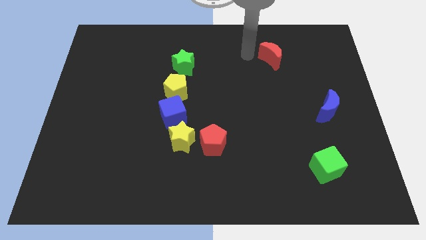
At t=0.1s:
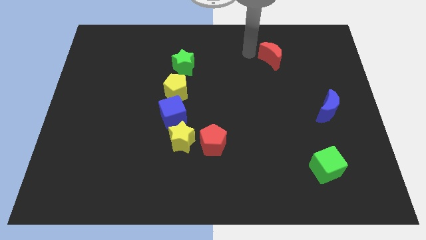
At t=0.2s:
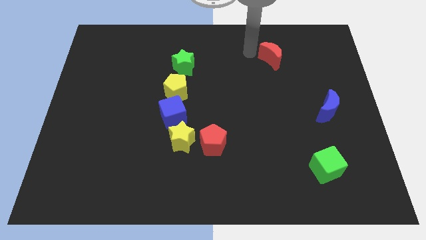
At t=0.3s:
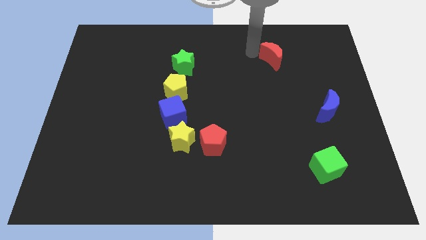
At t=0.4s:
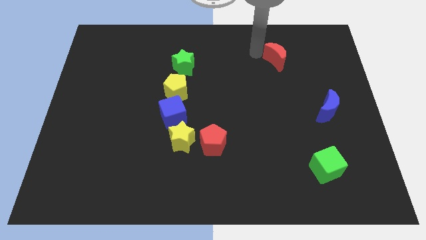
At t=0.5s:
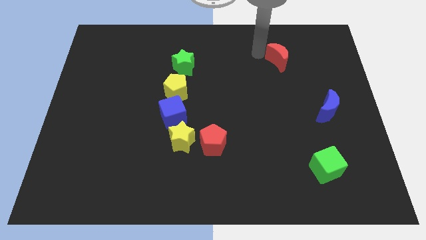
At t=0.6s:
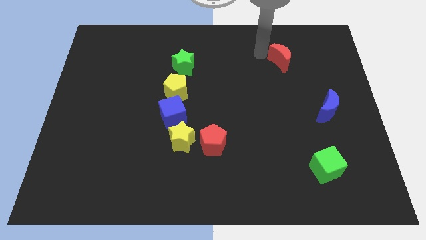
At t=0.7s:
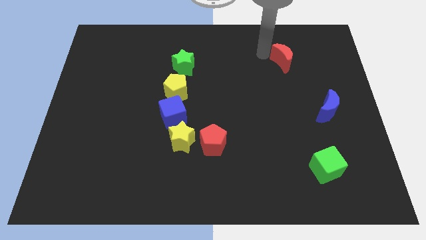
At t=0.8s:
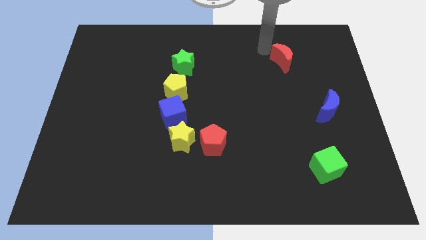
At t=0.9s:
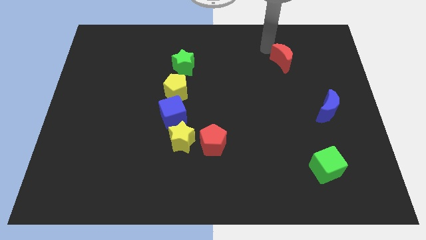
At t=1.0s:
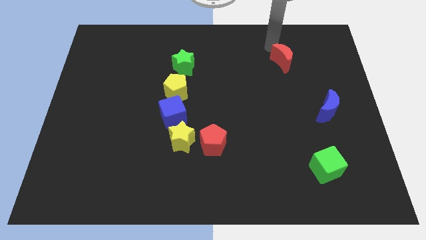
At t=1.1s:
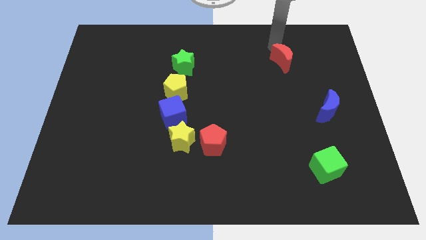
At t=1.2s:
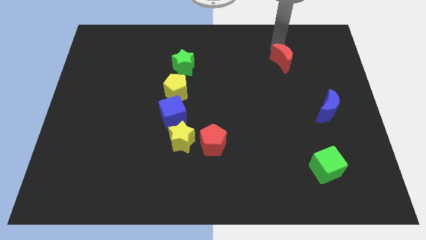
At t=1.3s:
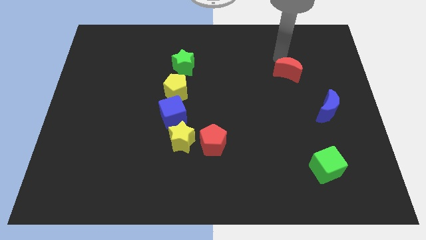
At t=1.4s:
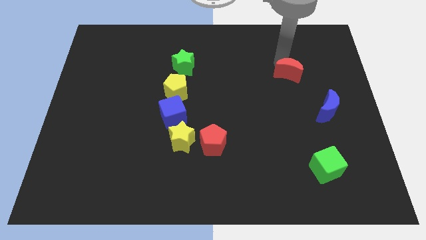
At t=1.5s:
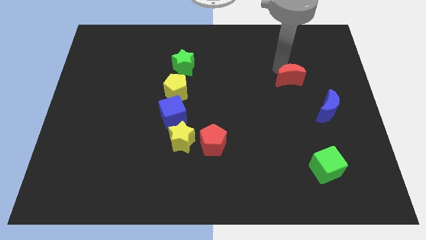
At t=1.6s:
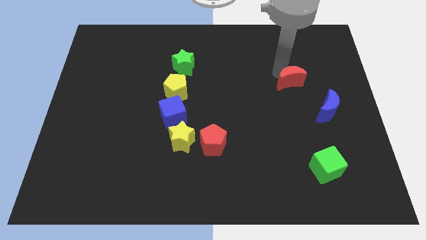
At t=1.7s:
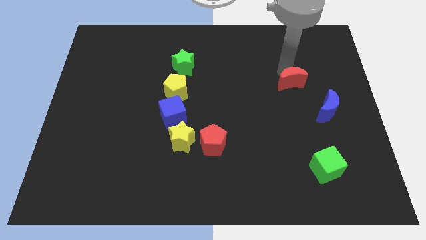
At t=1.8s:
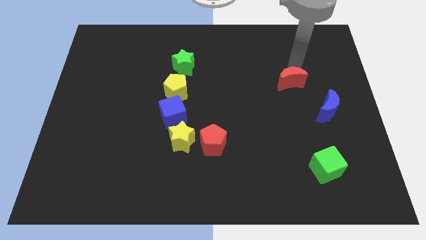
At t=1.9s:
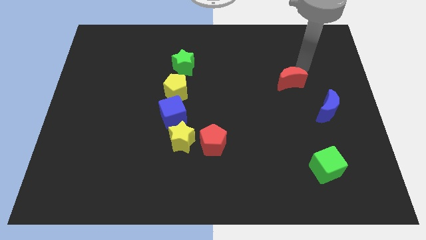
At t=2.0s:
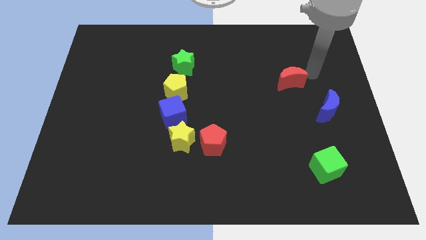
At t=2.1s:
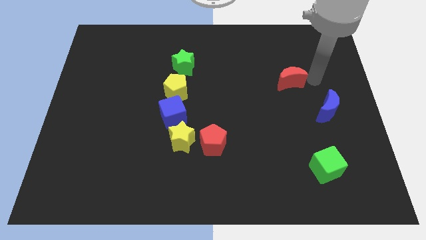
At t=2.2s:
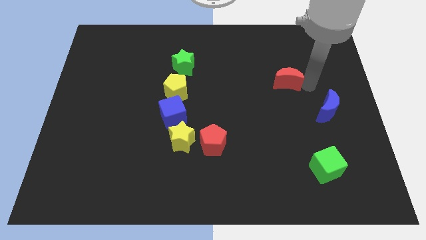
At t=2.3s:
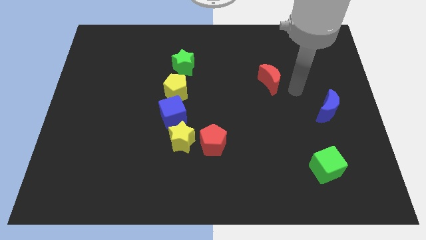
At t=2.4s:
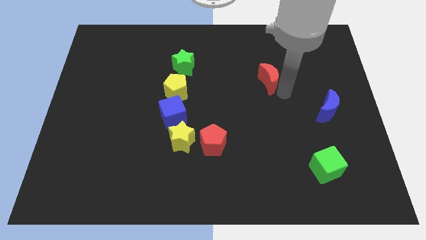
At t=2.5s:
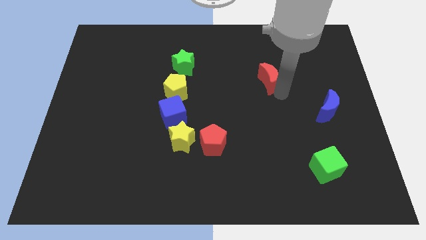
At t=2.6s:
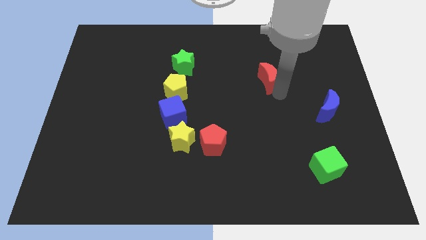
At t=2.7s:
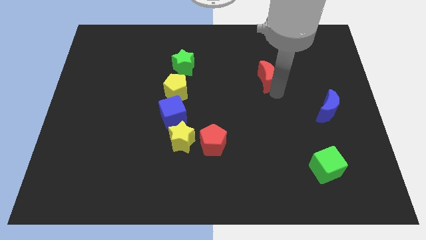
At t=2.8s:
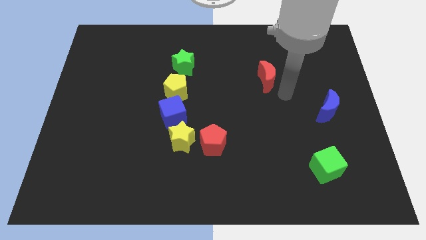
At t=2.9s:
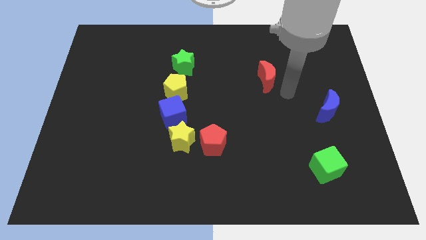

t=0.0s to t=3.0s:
place the red moon to the right of the yellow pentagon

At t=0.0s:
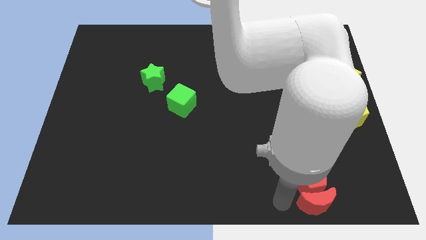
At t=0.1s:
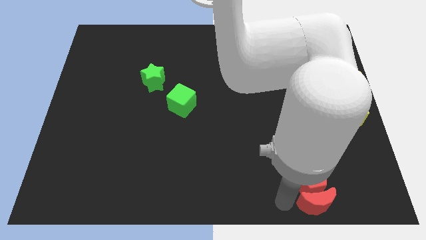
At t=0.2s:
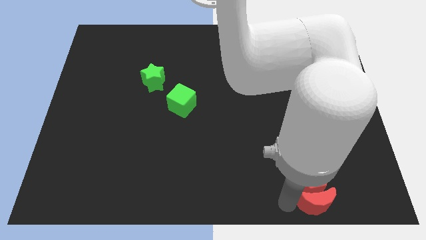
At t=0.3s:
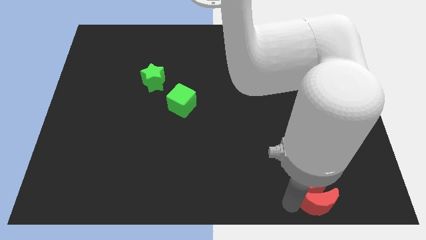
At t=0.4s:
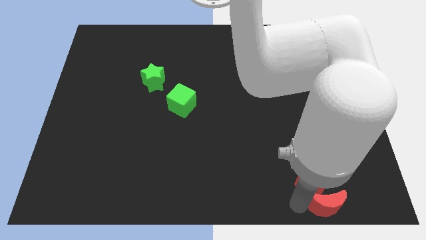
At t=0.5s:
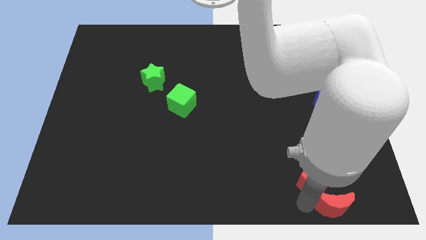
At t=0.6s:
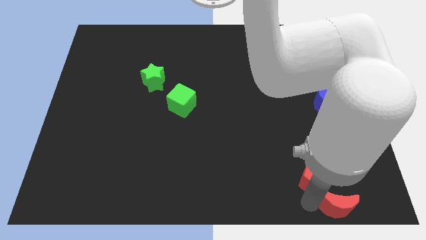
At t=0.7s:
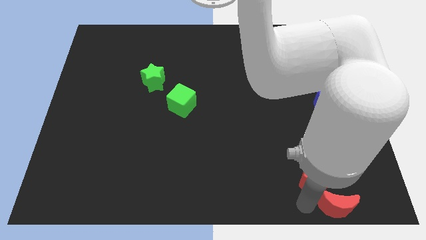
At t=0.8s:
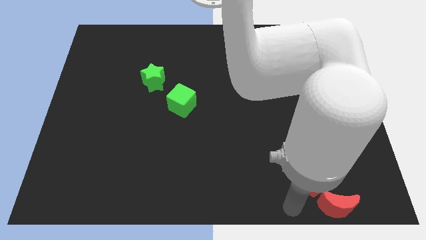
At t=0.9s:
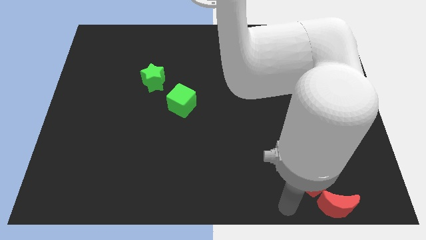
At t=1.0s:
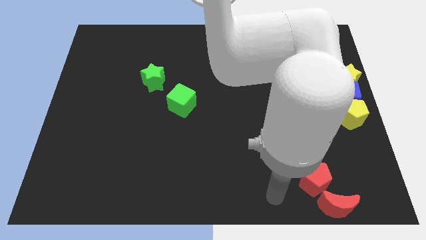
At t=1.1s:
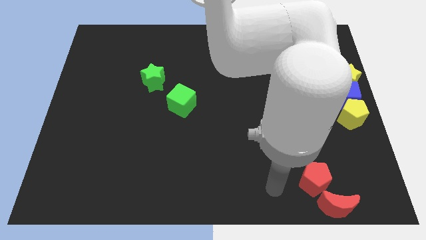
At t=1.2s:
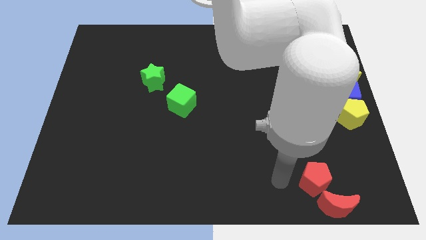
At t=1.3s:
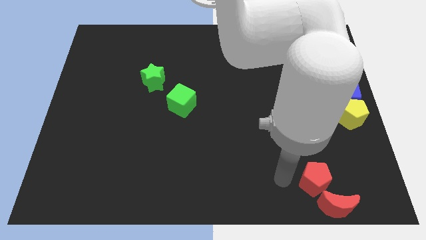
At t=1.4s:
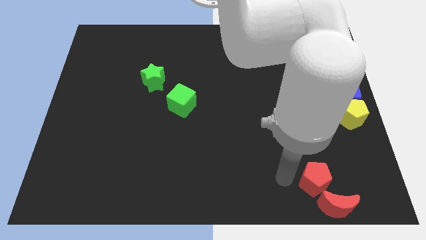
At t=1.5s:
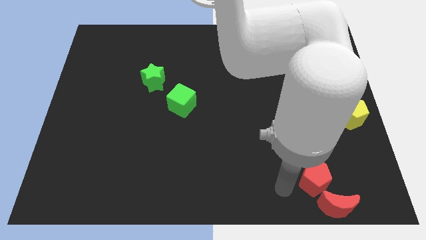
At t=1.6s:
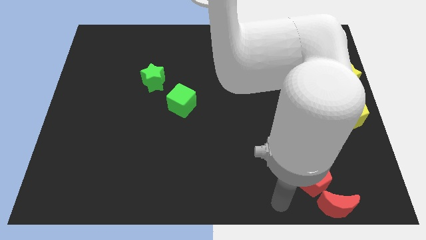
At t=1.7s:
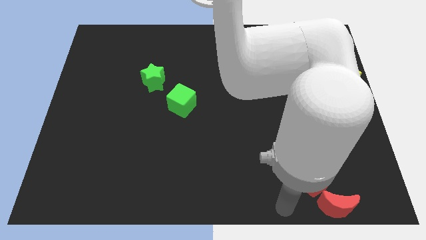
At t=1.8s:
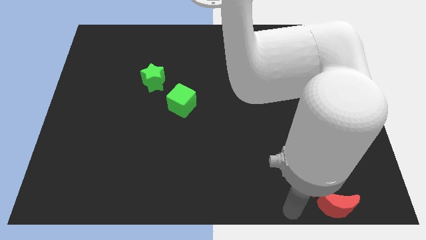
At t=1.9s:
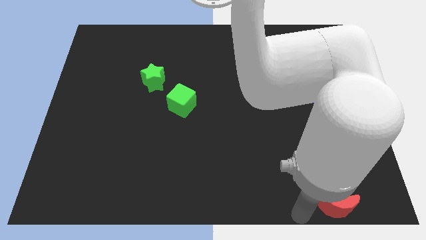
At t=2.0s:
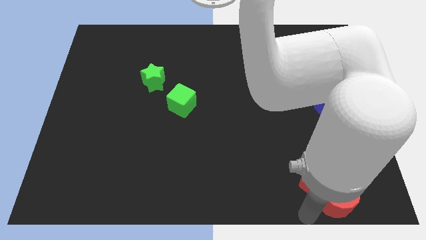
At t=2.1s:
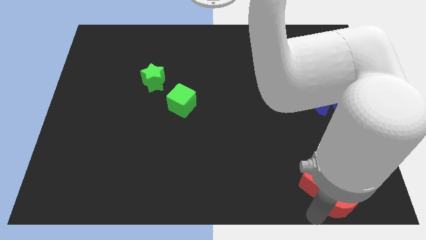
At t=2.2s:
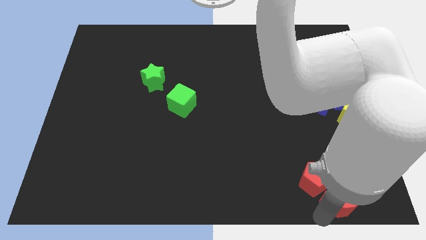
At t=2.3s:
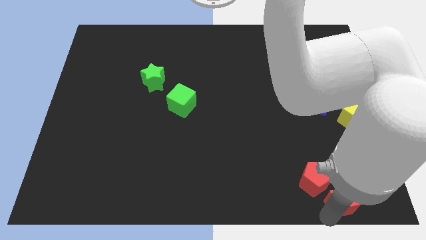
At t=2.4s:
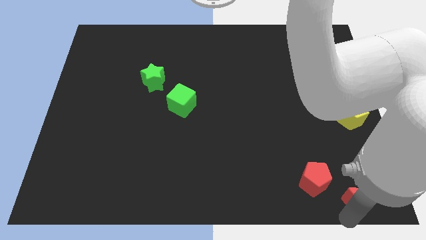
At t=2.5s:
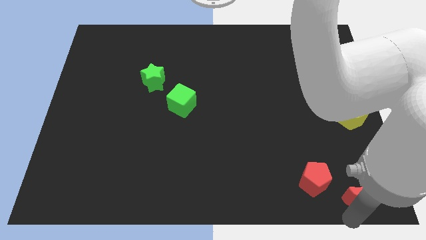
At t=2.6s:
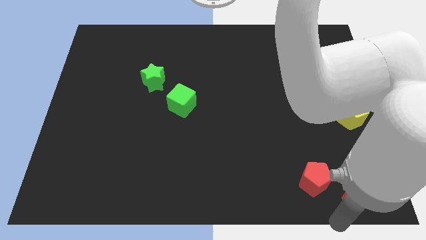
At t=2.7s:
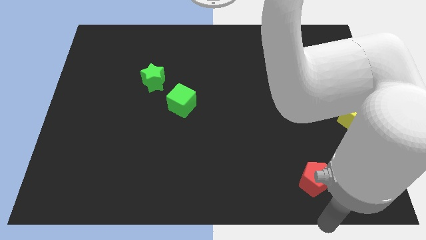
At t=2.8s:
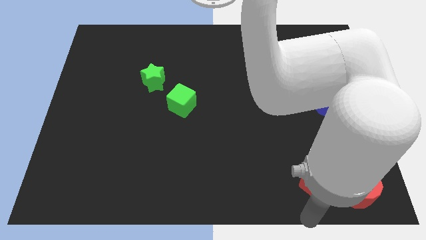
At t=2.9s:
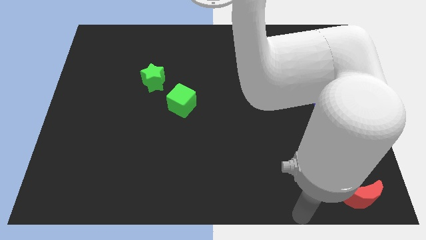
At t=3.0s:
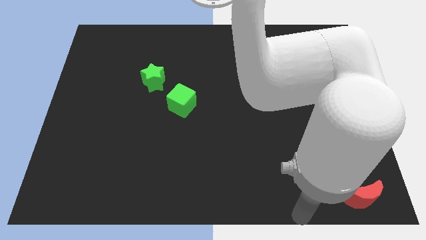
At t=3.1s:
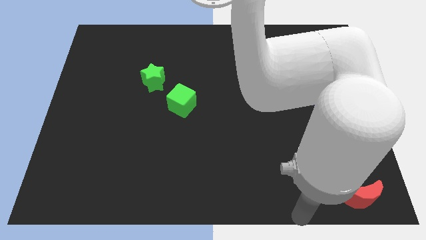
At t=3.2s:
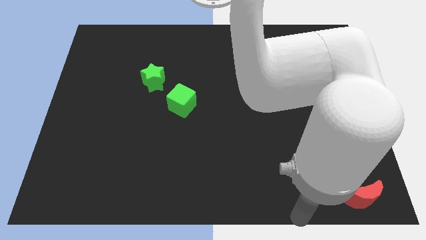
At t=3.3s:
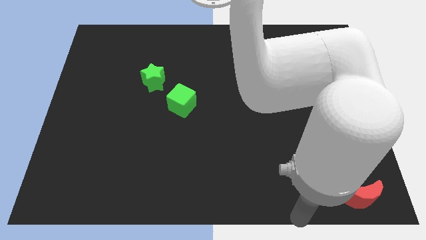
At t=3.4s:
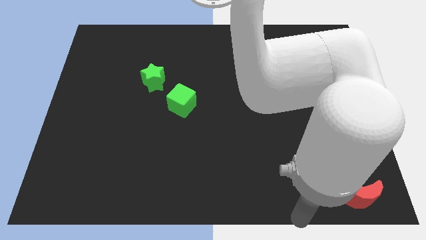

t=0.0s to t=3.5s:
move the red crescent away from the red pentagon

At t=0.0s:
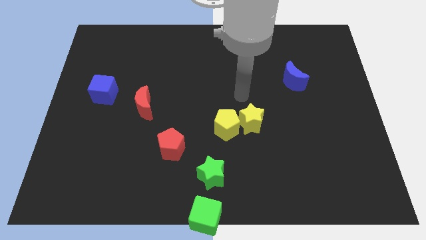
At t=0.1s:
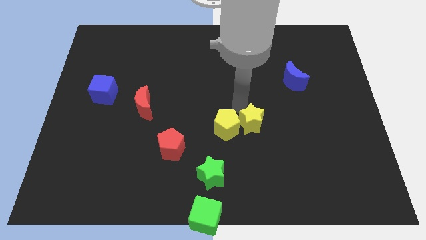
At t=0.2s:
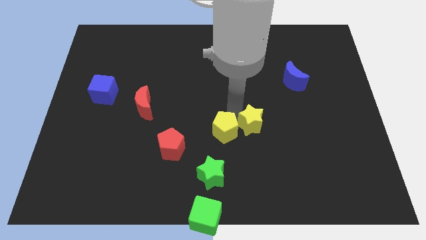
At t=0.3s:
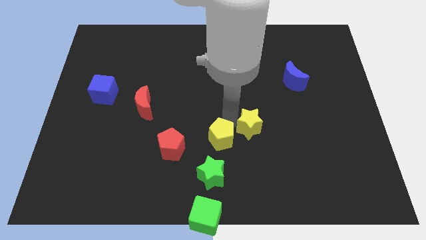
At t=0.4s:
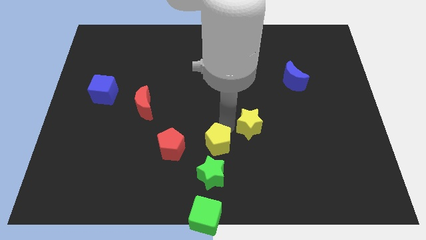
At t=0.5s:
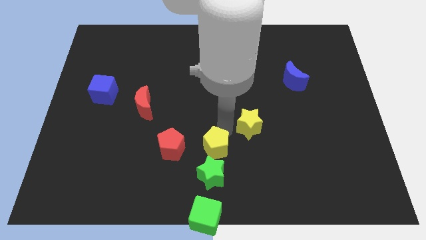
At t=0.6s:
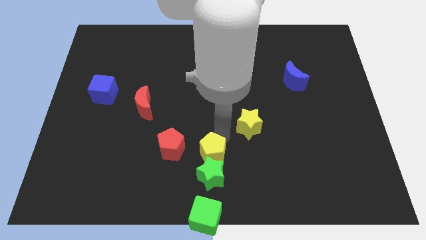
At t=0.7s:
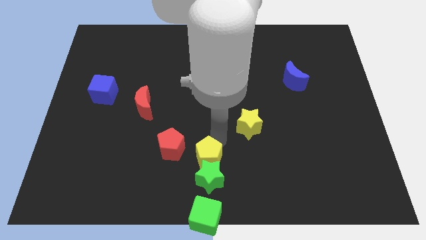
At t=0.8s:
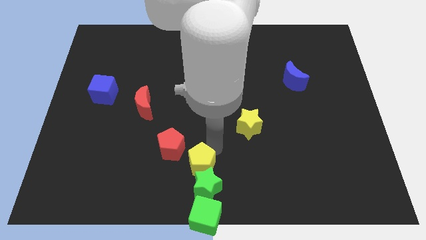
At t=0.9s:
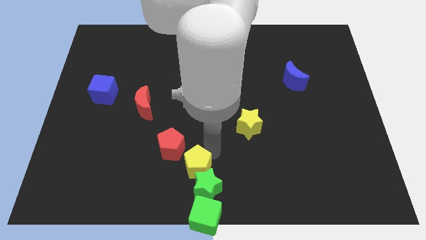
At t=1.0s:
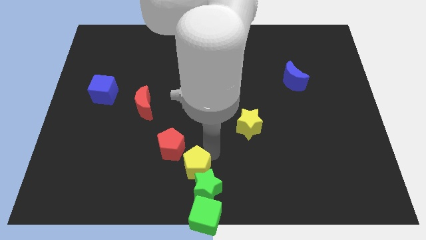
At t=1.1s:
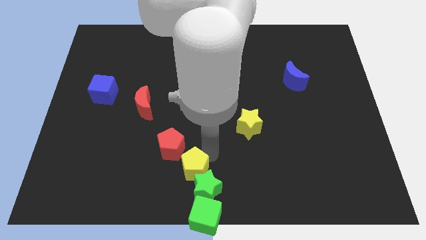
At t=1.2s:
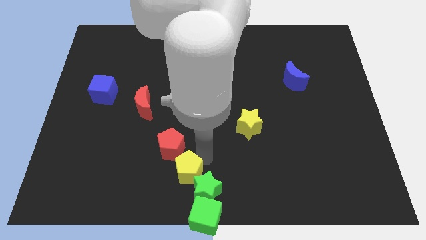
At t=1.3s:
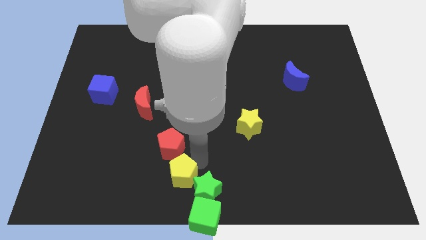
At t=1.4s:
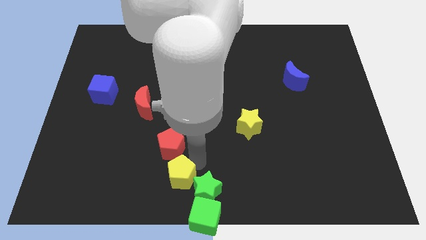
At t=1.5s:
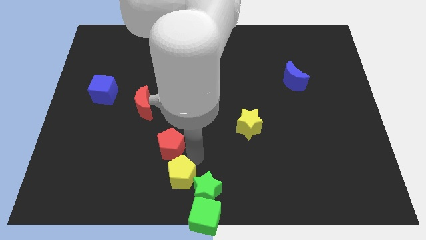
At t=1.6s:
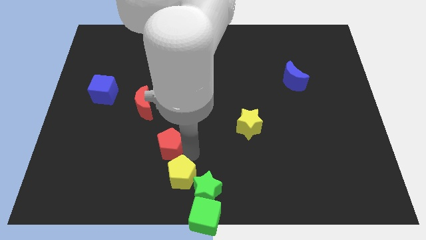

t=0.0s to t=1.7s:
push the yellow pentagon away from the yellow star

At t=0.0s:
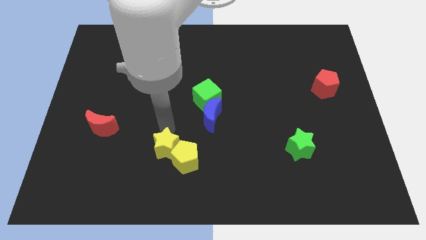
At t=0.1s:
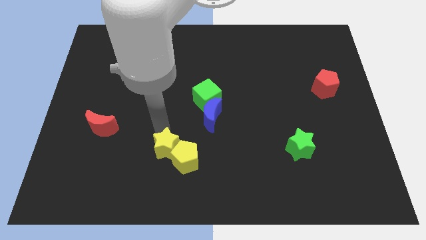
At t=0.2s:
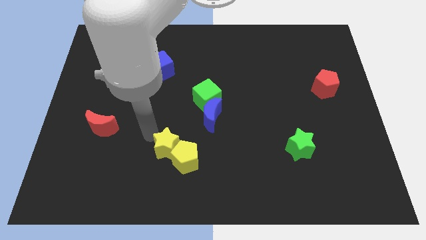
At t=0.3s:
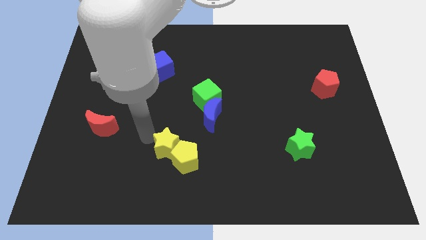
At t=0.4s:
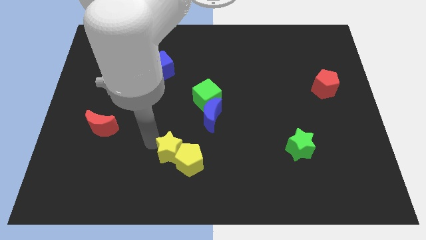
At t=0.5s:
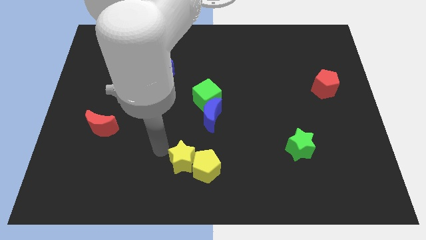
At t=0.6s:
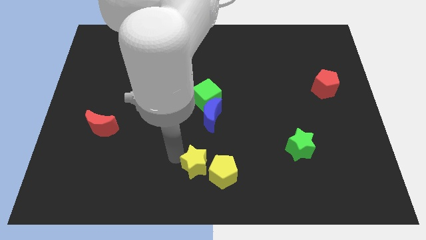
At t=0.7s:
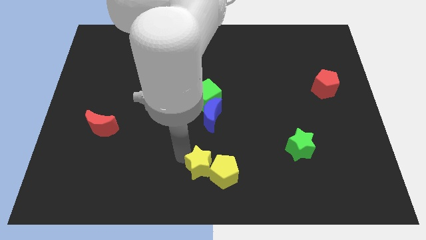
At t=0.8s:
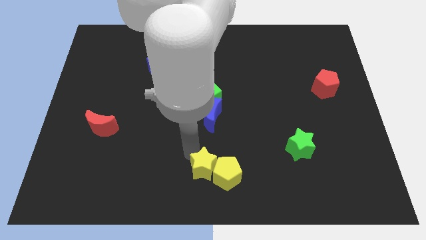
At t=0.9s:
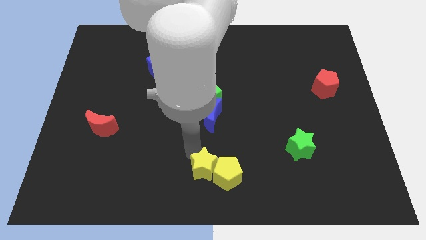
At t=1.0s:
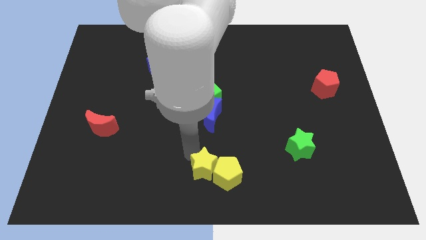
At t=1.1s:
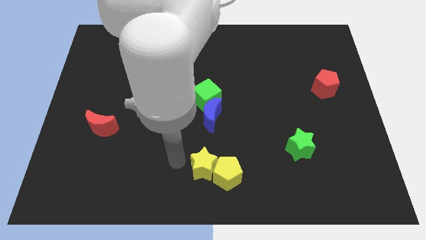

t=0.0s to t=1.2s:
slide the yellow star and yellow pentagon slightly to the bottom center
